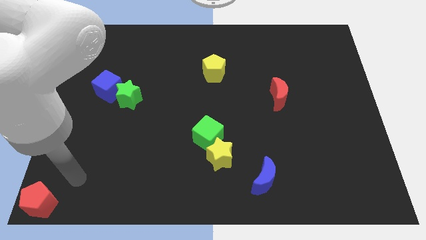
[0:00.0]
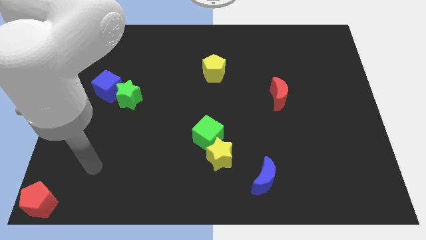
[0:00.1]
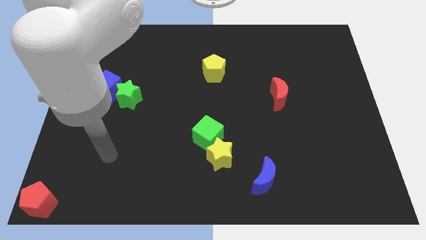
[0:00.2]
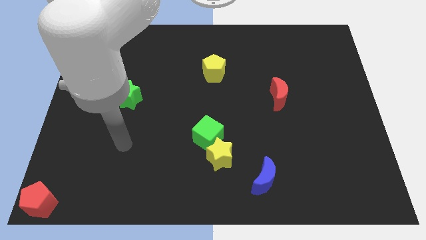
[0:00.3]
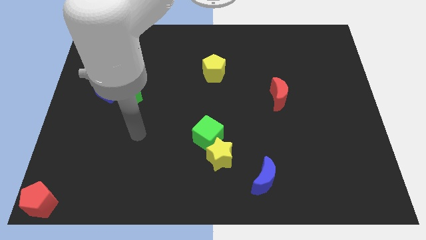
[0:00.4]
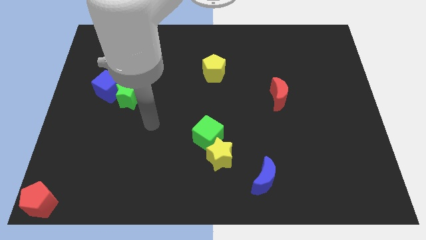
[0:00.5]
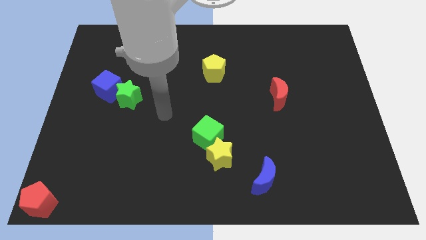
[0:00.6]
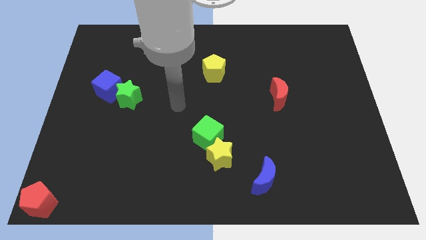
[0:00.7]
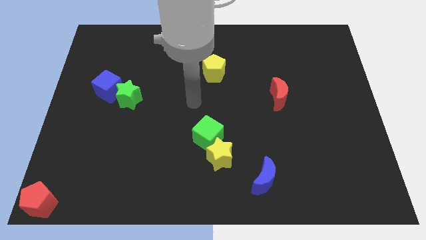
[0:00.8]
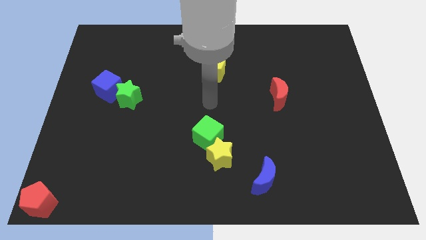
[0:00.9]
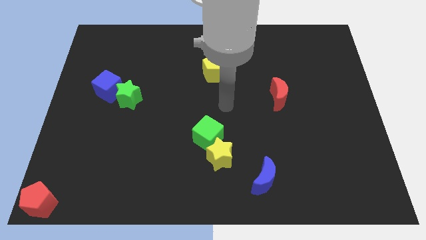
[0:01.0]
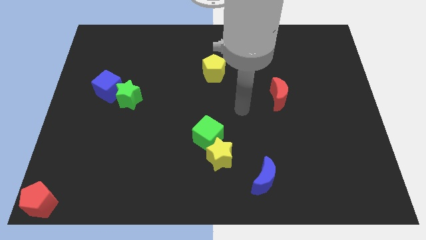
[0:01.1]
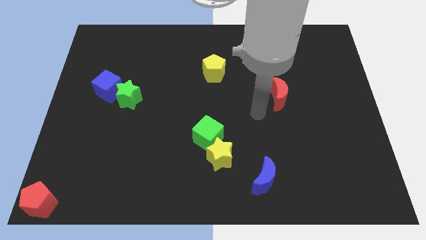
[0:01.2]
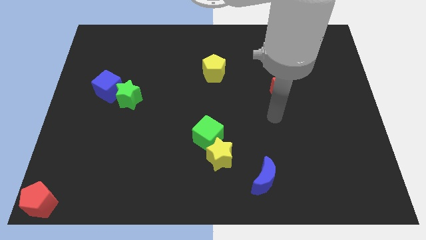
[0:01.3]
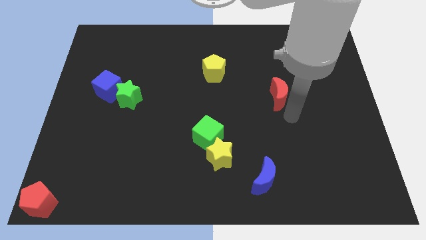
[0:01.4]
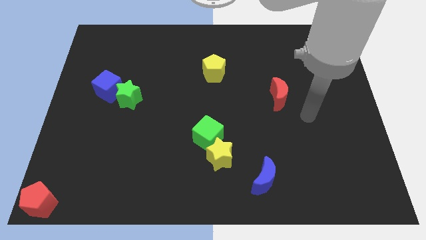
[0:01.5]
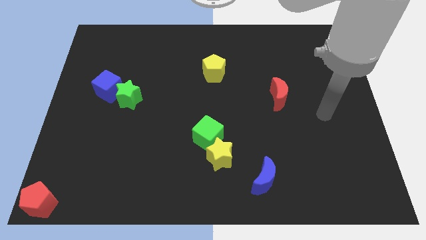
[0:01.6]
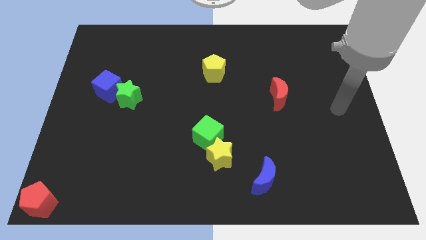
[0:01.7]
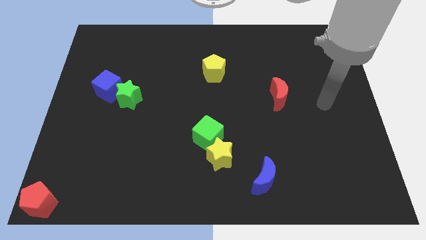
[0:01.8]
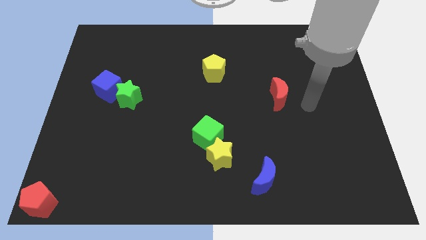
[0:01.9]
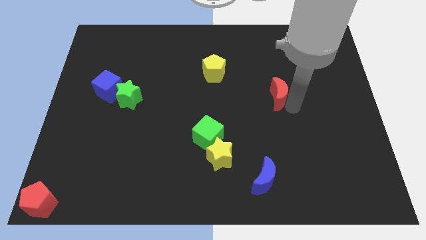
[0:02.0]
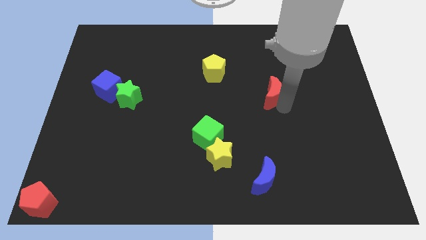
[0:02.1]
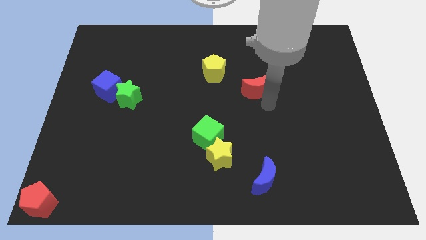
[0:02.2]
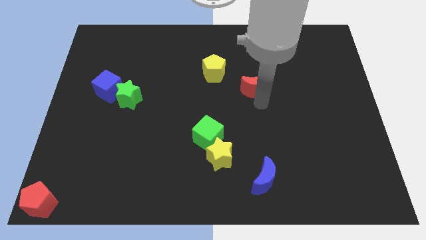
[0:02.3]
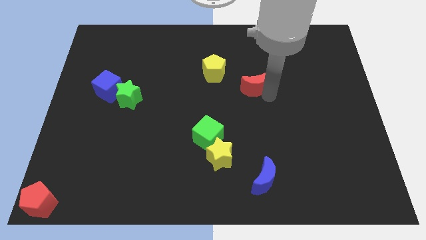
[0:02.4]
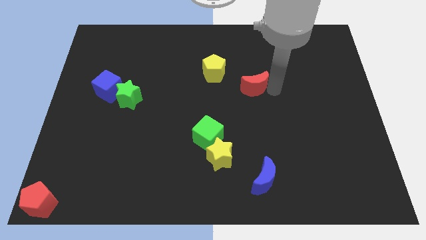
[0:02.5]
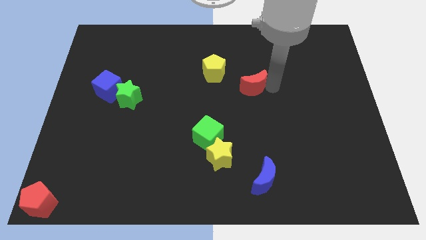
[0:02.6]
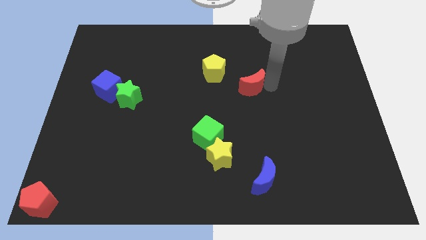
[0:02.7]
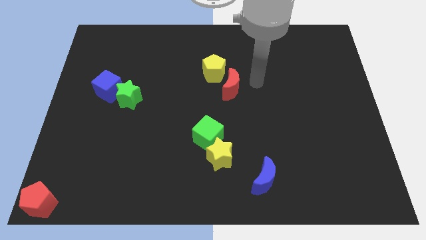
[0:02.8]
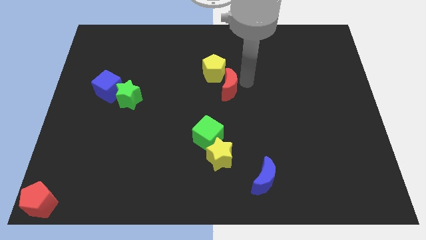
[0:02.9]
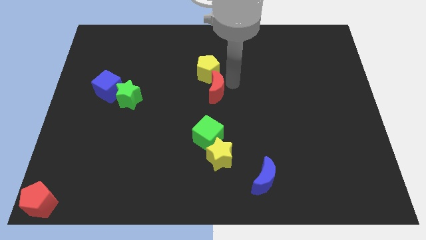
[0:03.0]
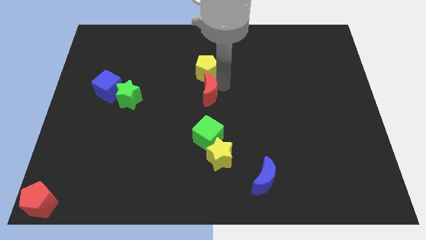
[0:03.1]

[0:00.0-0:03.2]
place the red crescent below the yellow pentagon

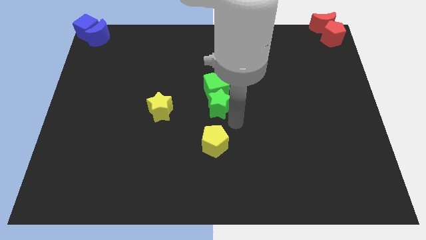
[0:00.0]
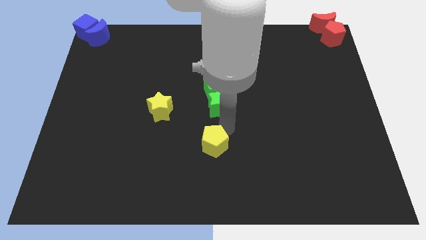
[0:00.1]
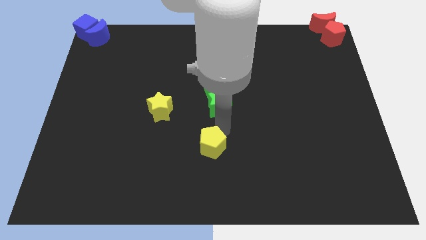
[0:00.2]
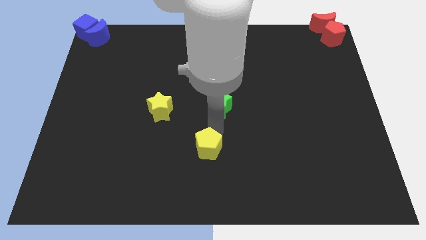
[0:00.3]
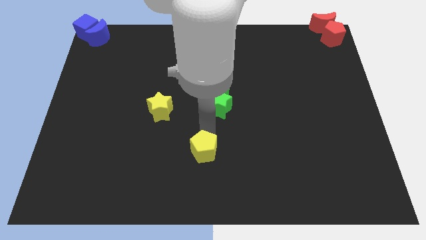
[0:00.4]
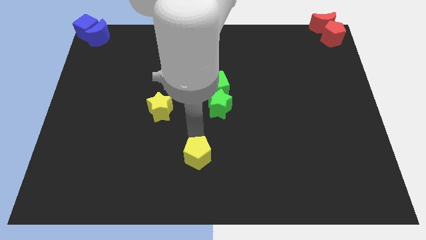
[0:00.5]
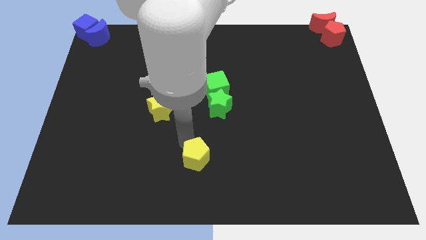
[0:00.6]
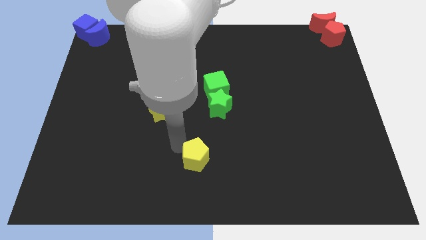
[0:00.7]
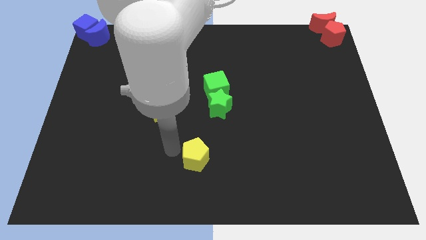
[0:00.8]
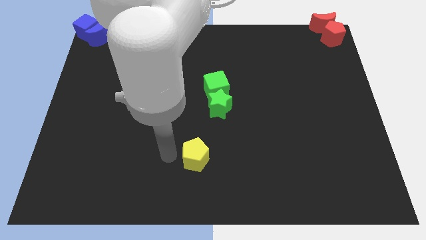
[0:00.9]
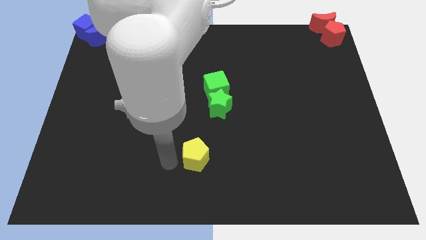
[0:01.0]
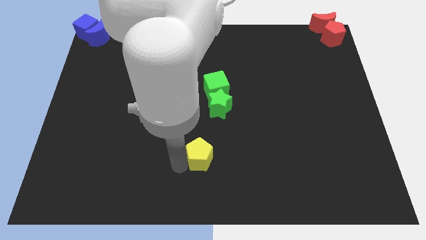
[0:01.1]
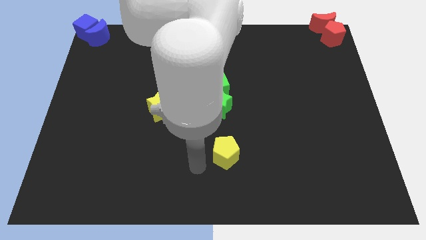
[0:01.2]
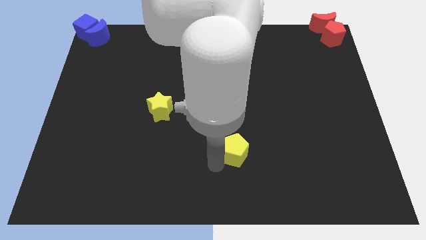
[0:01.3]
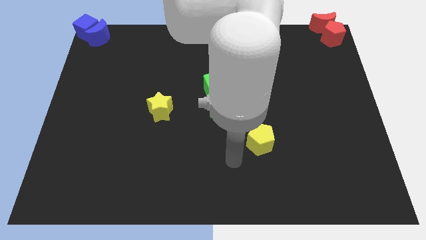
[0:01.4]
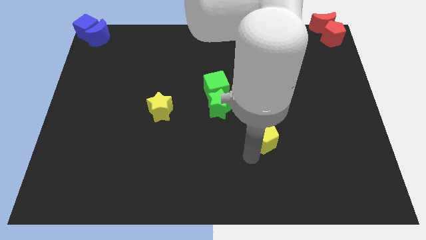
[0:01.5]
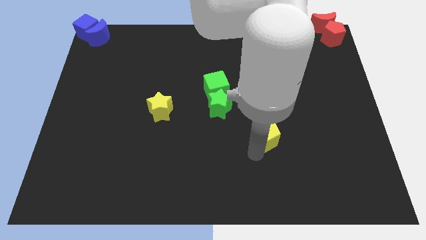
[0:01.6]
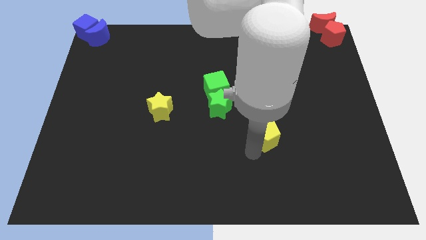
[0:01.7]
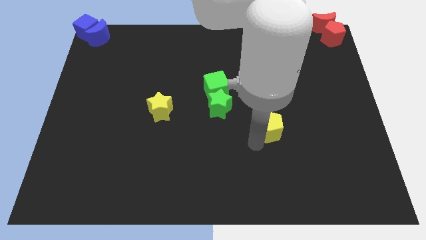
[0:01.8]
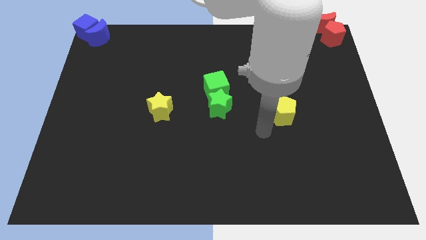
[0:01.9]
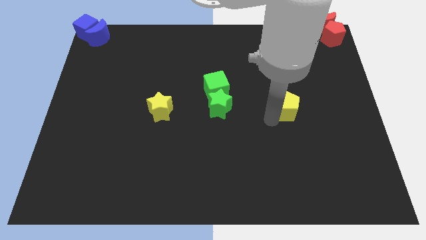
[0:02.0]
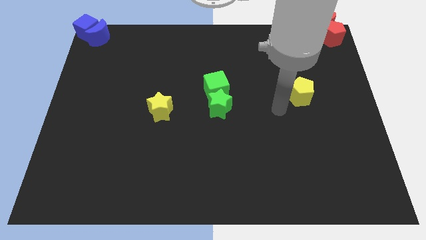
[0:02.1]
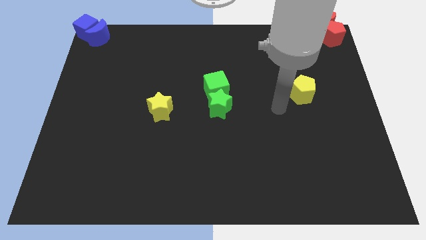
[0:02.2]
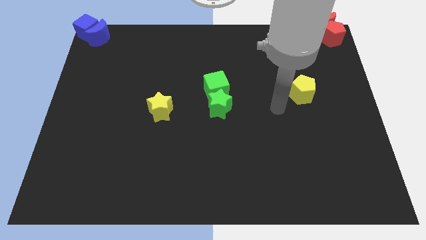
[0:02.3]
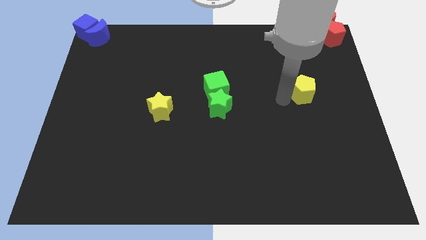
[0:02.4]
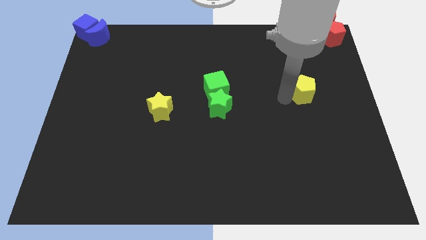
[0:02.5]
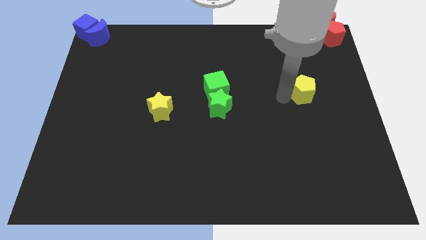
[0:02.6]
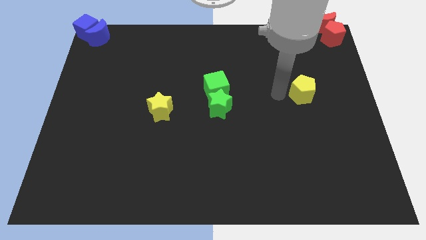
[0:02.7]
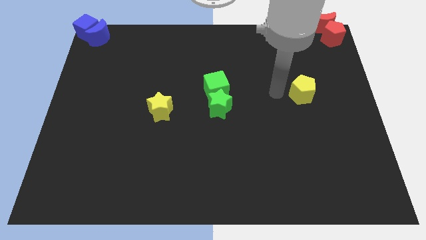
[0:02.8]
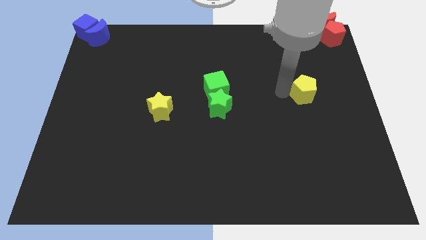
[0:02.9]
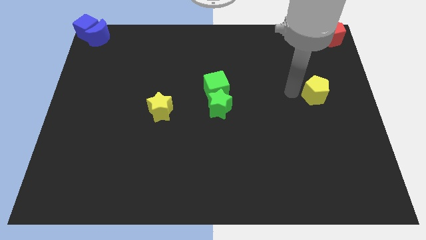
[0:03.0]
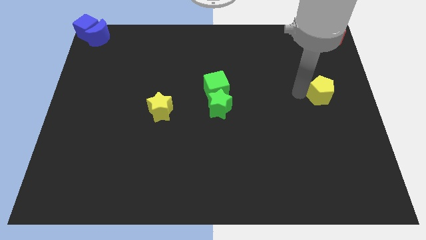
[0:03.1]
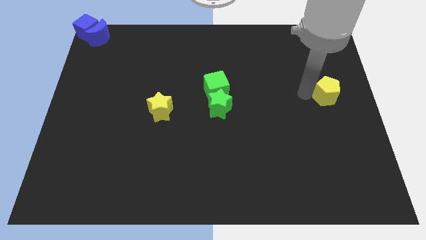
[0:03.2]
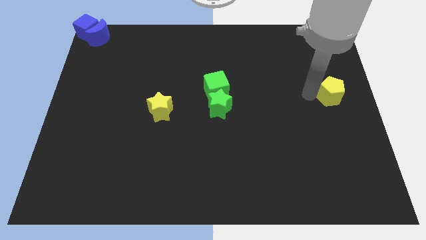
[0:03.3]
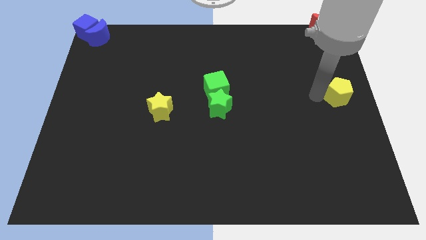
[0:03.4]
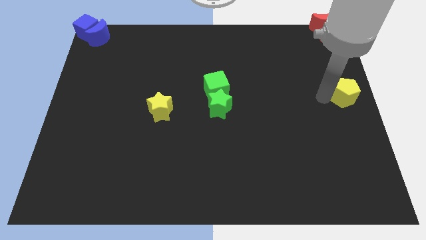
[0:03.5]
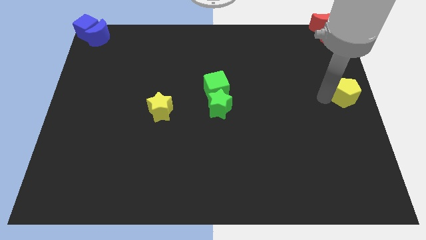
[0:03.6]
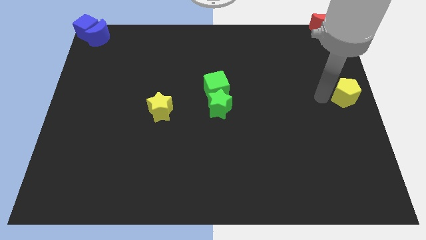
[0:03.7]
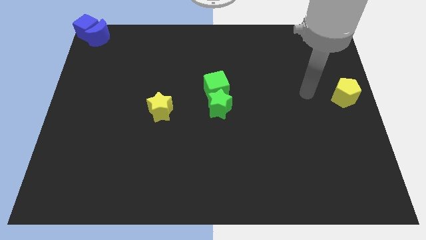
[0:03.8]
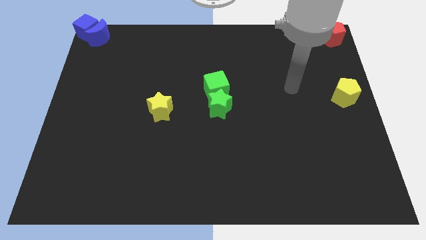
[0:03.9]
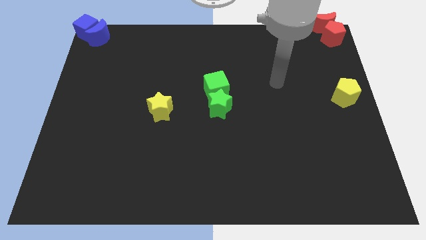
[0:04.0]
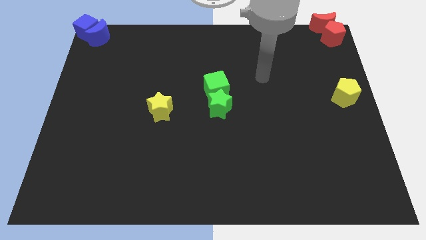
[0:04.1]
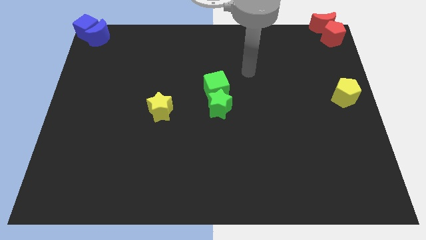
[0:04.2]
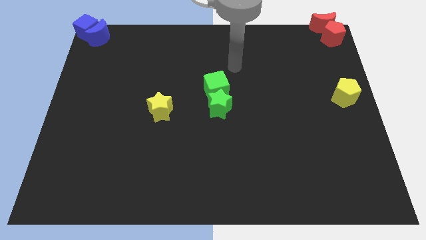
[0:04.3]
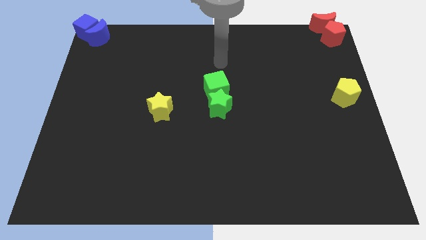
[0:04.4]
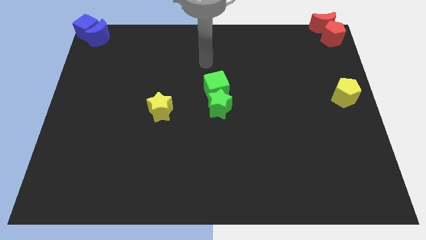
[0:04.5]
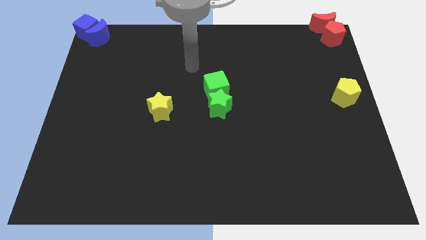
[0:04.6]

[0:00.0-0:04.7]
place the yellow pentagon to the center right

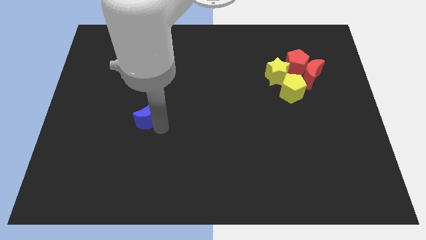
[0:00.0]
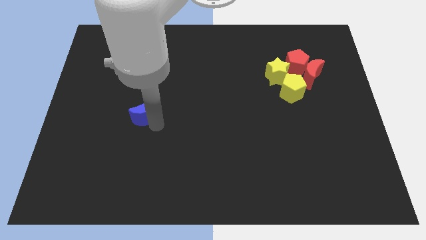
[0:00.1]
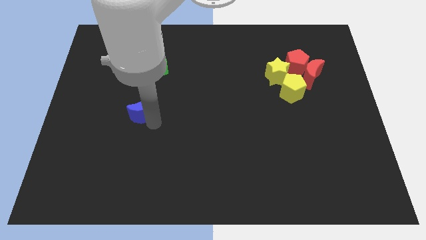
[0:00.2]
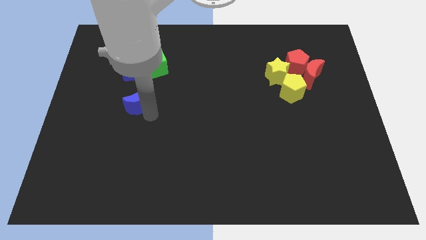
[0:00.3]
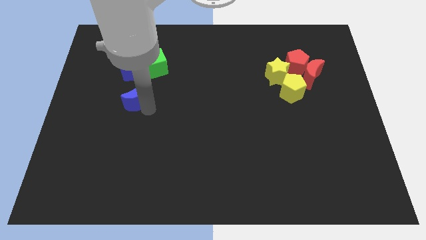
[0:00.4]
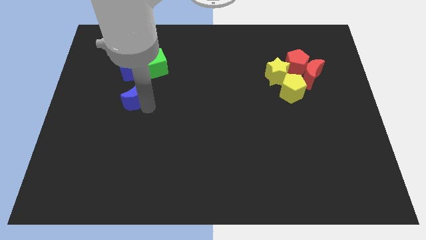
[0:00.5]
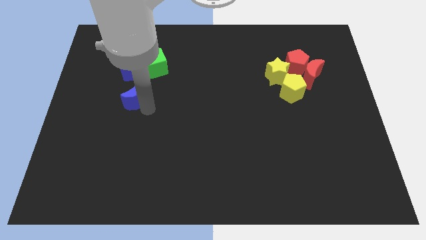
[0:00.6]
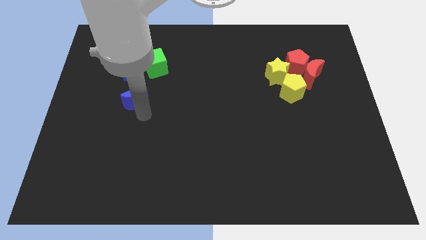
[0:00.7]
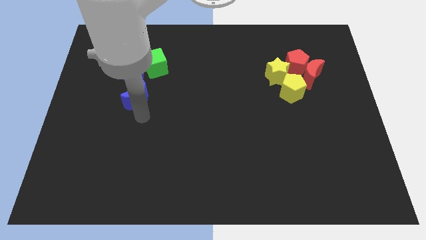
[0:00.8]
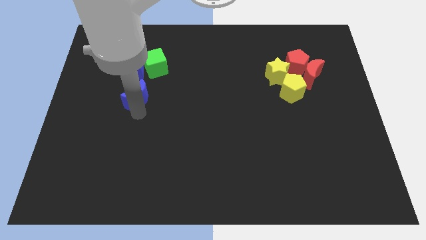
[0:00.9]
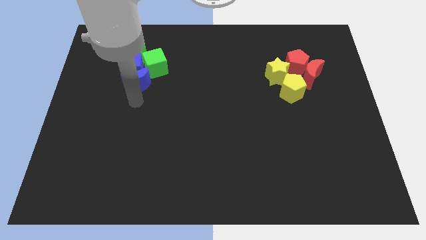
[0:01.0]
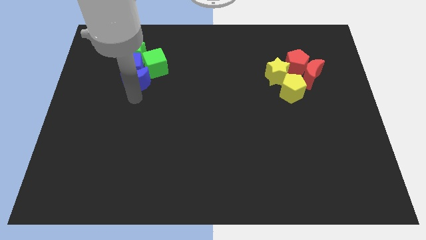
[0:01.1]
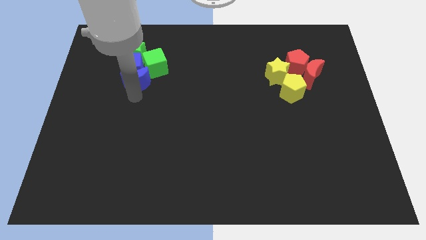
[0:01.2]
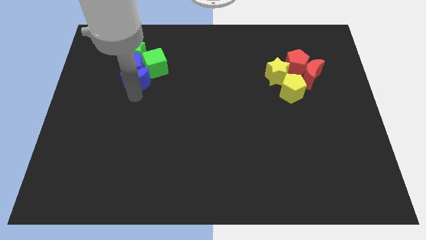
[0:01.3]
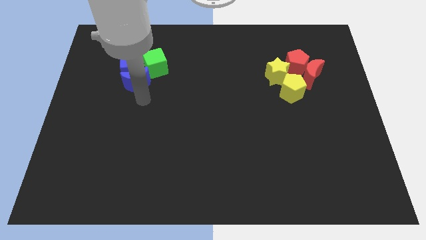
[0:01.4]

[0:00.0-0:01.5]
move the blue crescent into the group of blocks
